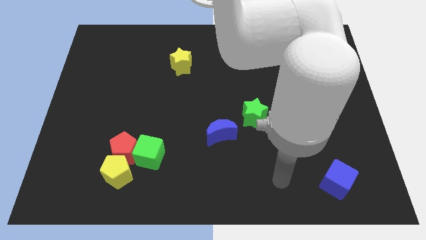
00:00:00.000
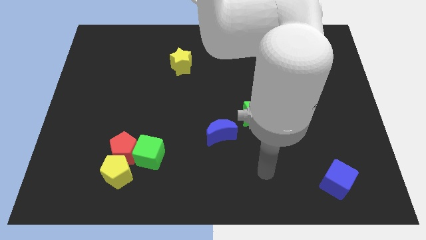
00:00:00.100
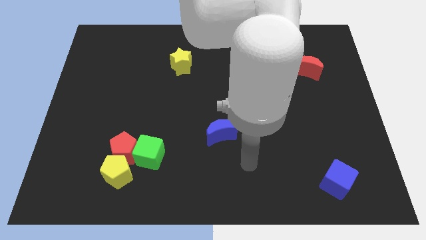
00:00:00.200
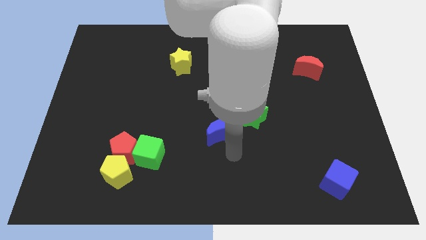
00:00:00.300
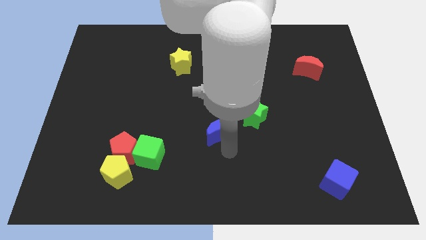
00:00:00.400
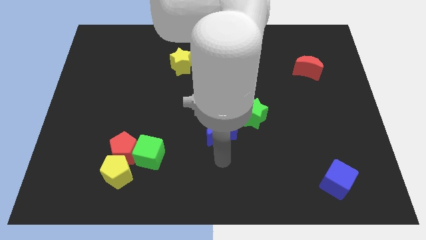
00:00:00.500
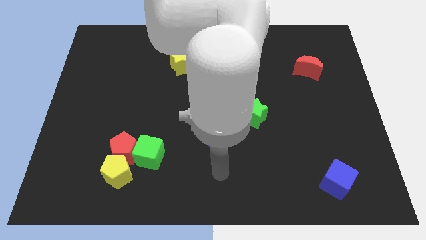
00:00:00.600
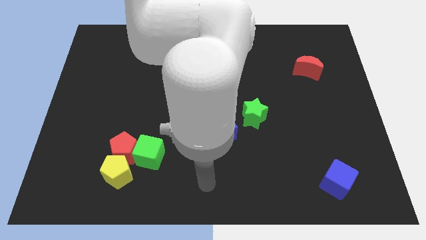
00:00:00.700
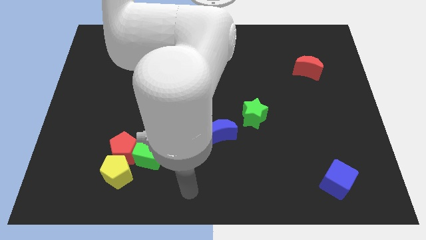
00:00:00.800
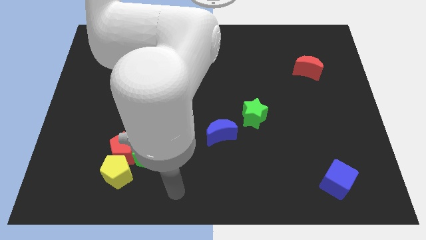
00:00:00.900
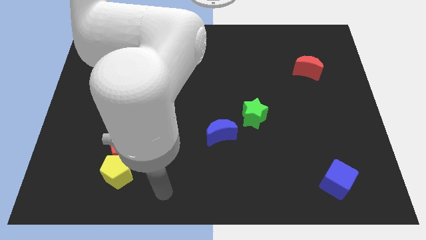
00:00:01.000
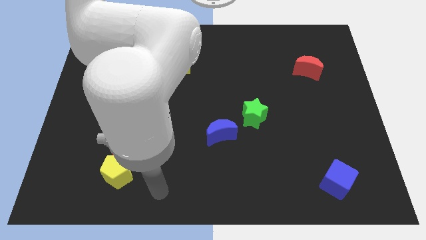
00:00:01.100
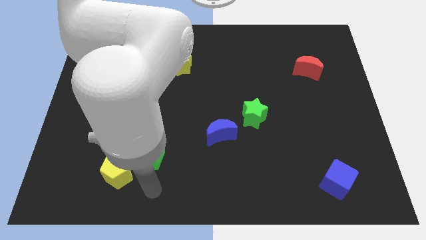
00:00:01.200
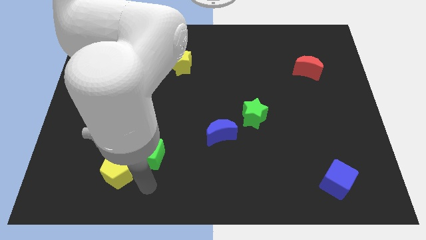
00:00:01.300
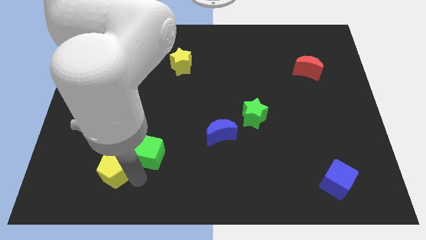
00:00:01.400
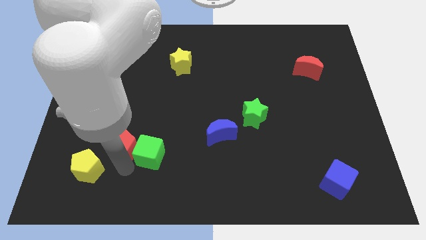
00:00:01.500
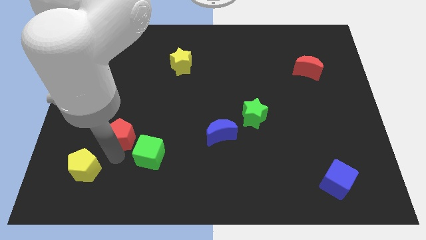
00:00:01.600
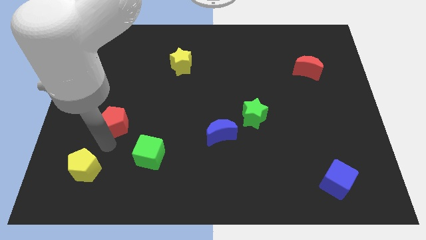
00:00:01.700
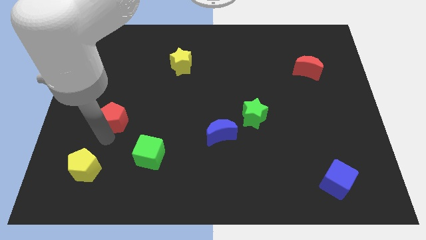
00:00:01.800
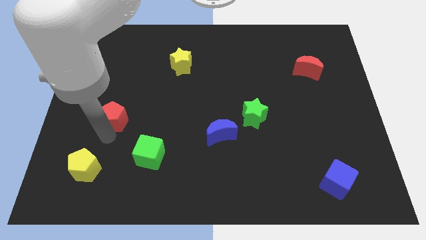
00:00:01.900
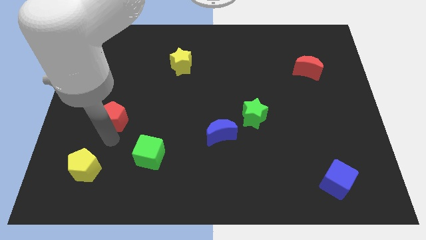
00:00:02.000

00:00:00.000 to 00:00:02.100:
separate yellow pentagon and red pentagon from green cube

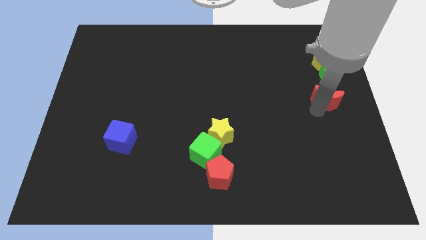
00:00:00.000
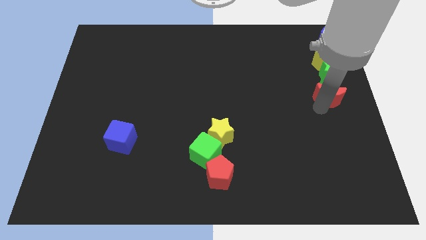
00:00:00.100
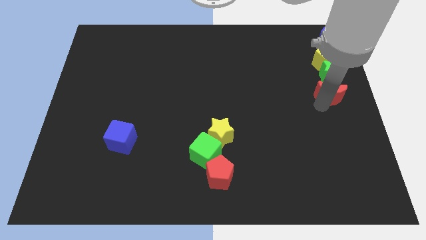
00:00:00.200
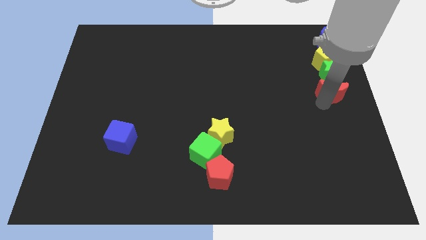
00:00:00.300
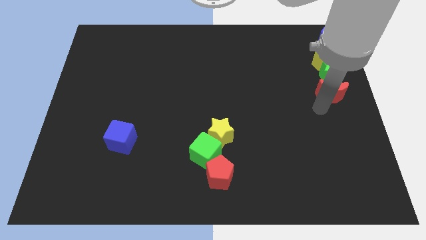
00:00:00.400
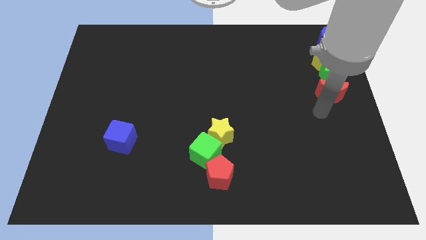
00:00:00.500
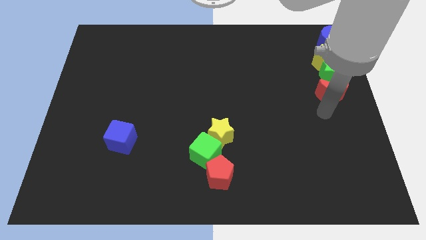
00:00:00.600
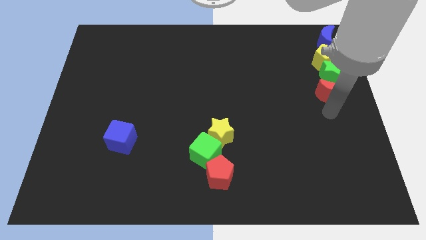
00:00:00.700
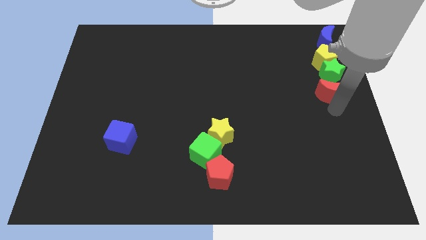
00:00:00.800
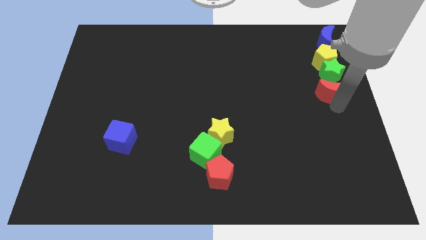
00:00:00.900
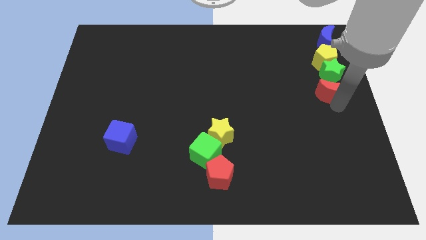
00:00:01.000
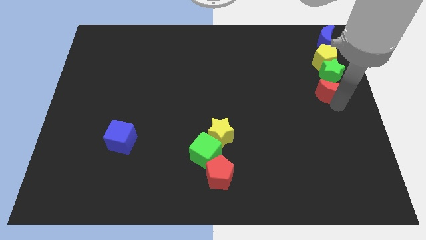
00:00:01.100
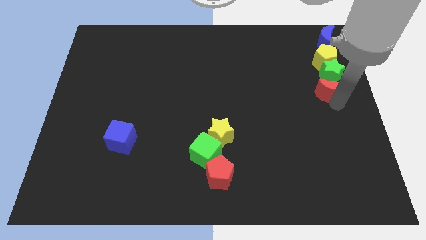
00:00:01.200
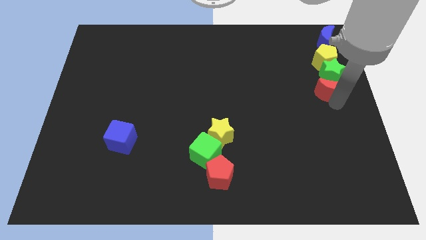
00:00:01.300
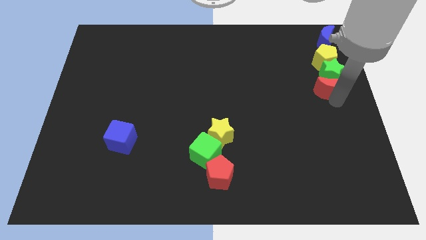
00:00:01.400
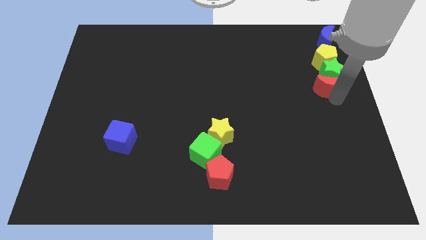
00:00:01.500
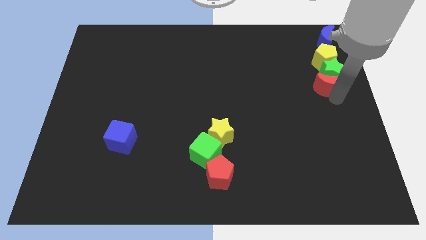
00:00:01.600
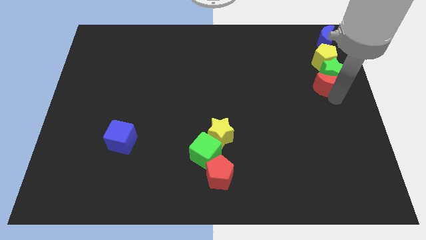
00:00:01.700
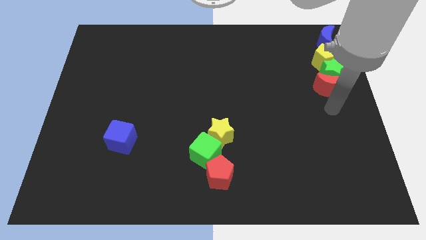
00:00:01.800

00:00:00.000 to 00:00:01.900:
push the red moon into the green star

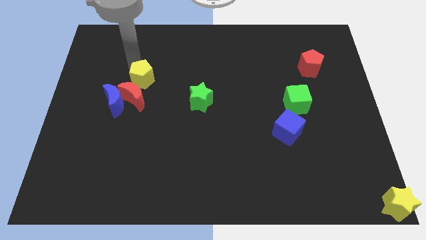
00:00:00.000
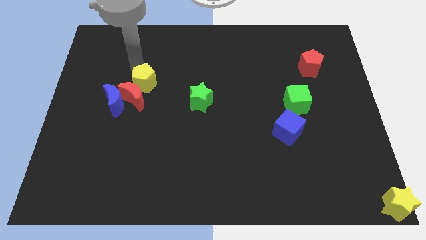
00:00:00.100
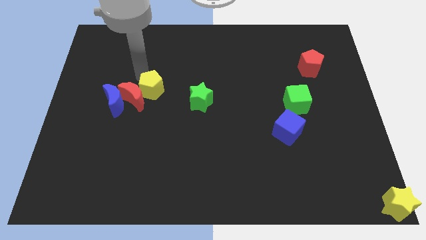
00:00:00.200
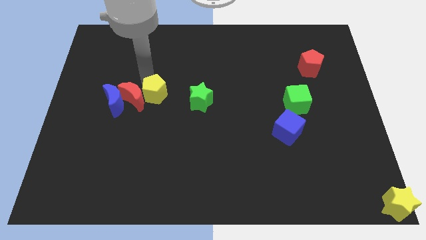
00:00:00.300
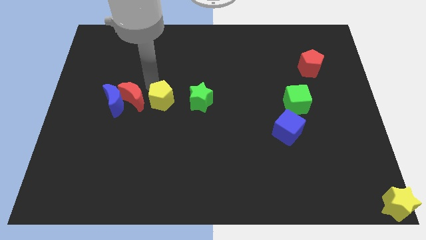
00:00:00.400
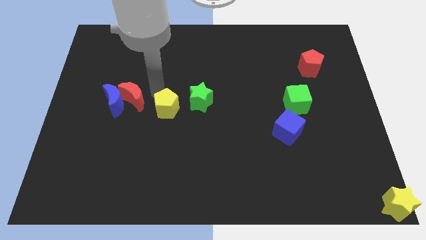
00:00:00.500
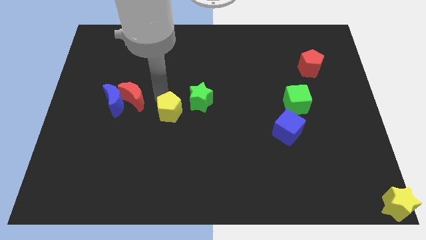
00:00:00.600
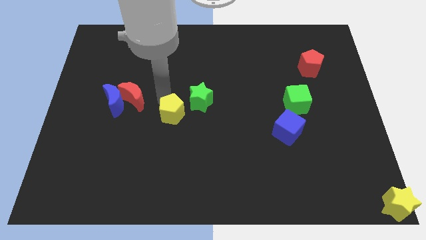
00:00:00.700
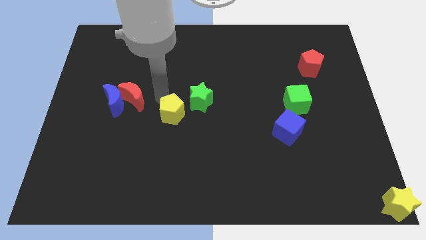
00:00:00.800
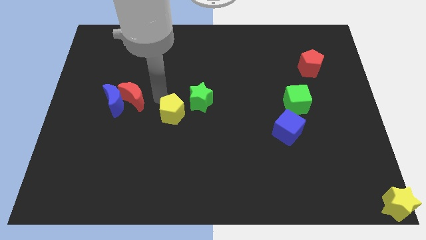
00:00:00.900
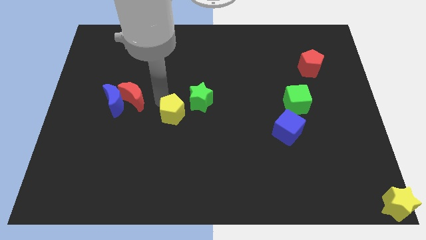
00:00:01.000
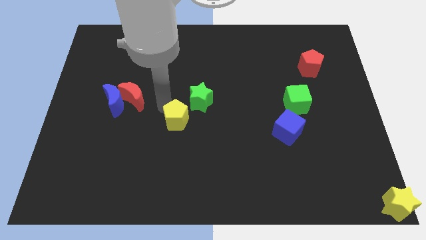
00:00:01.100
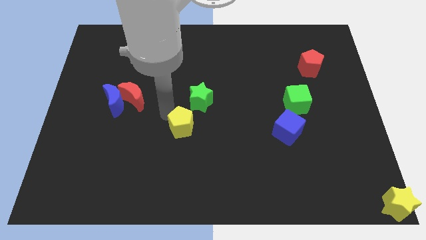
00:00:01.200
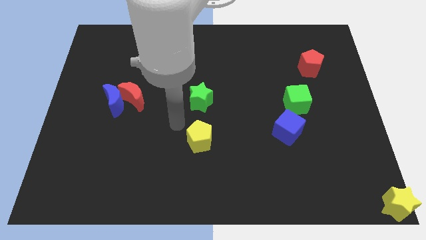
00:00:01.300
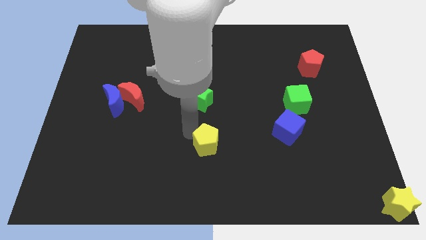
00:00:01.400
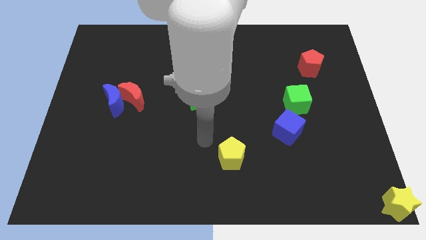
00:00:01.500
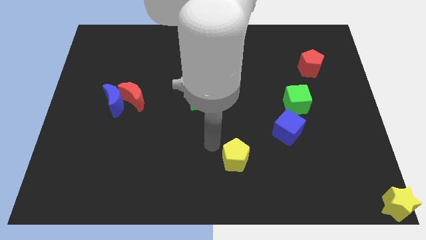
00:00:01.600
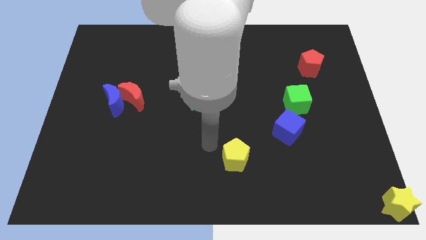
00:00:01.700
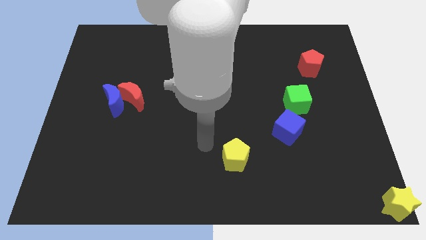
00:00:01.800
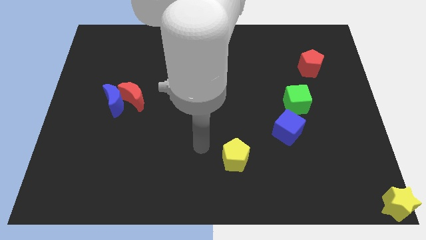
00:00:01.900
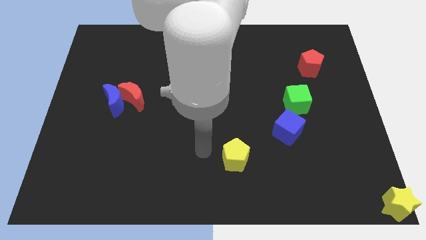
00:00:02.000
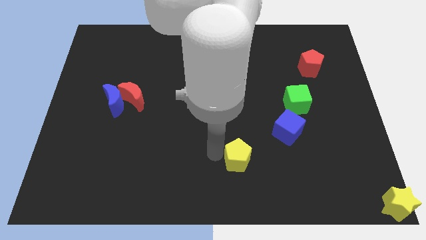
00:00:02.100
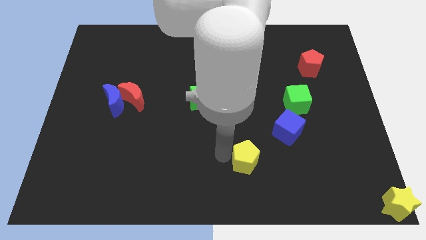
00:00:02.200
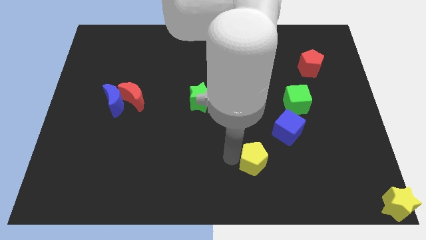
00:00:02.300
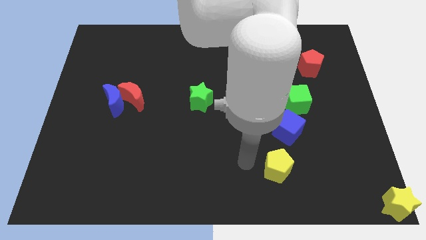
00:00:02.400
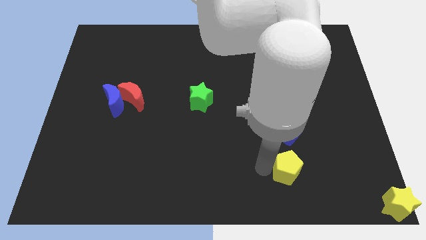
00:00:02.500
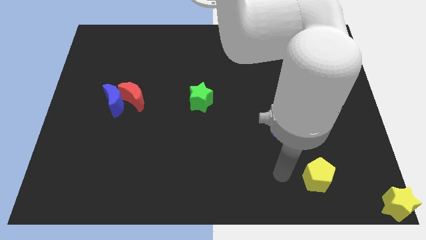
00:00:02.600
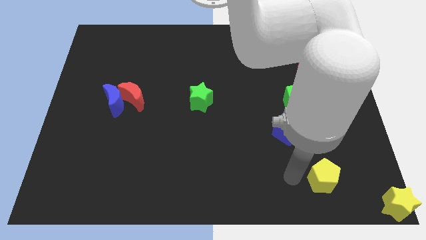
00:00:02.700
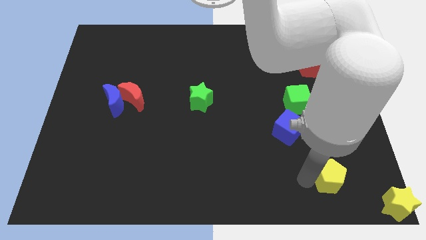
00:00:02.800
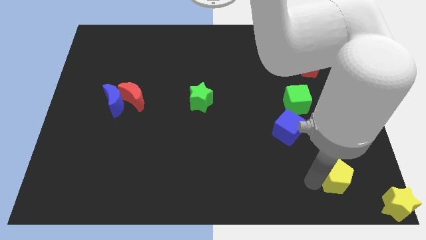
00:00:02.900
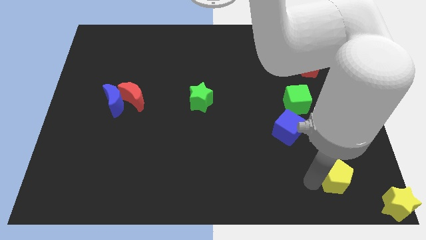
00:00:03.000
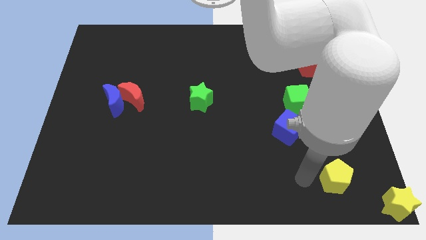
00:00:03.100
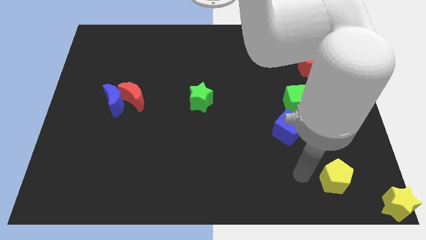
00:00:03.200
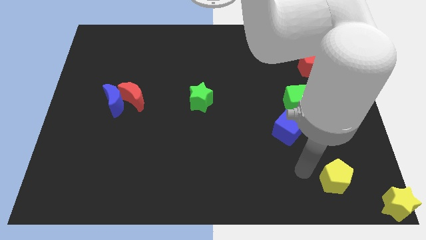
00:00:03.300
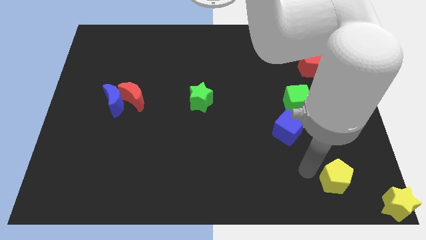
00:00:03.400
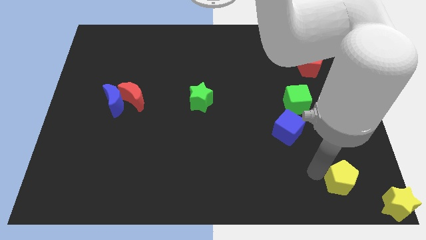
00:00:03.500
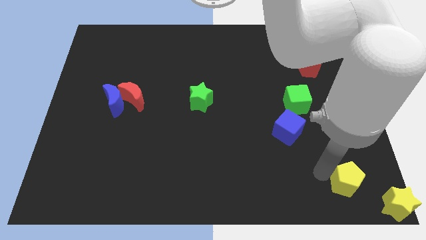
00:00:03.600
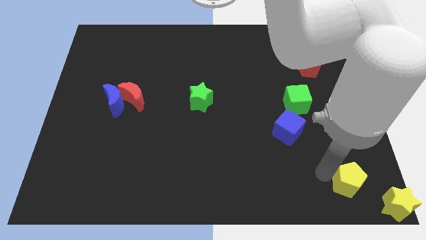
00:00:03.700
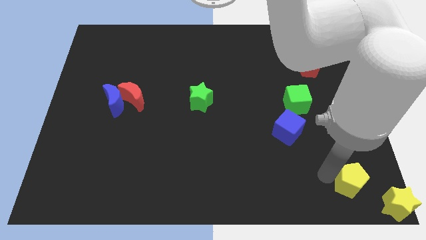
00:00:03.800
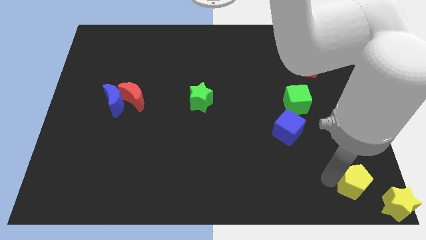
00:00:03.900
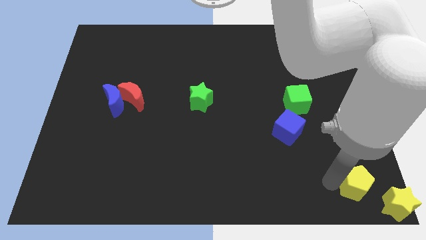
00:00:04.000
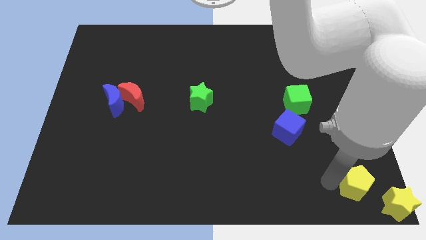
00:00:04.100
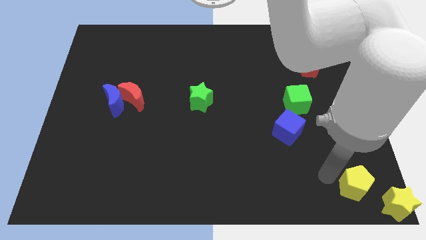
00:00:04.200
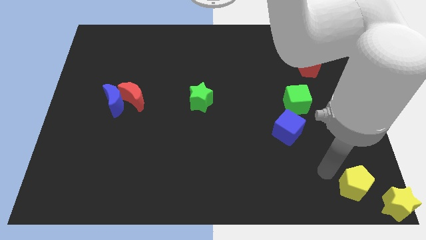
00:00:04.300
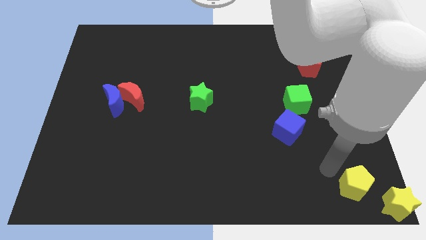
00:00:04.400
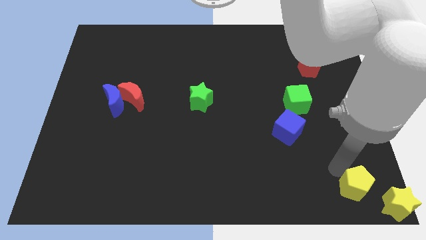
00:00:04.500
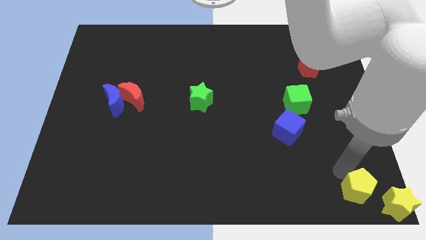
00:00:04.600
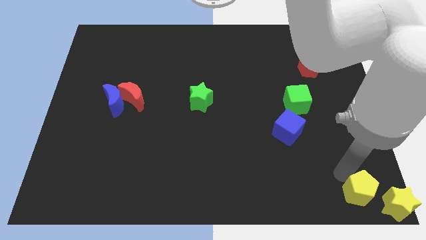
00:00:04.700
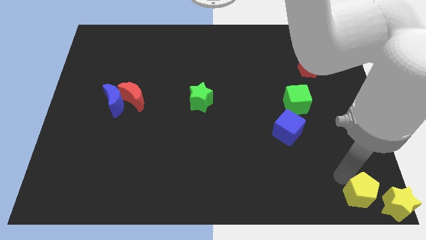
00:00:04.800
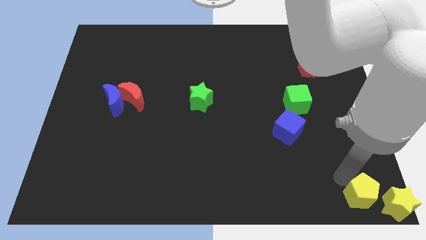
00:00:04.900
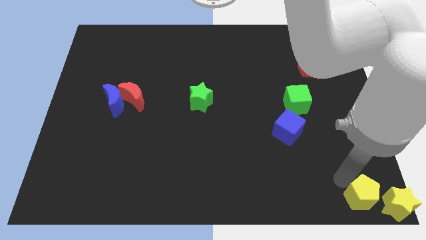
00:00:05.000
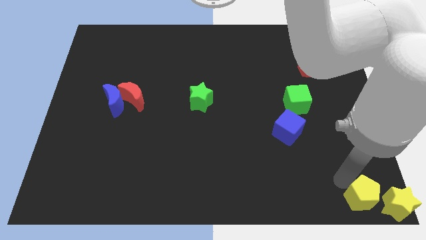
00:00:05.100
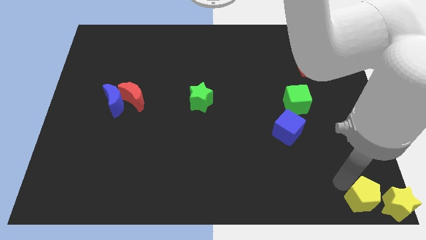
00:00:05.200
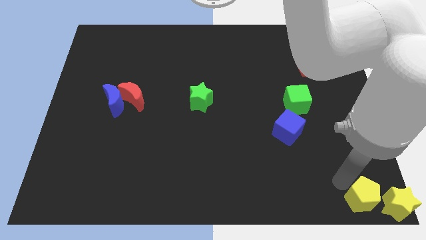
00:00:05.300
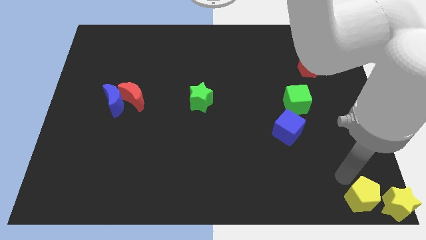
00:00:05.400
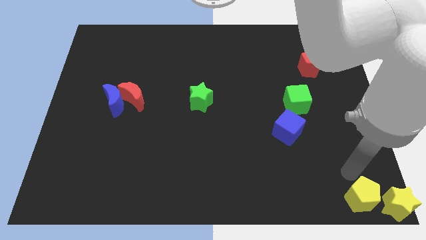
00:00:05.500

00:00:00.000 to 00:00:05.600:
move the yellow pentagon left to the yellow star
